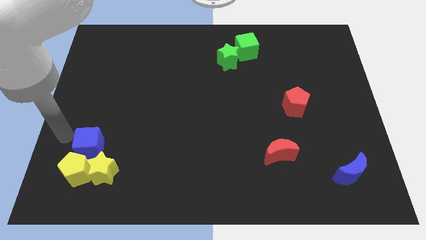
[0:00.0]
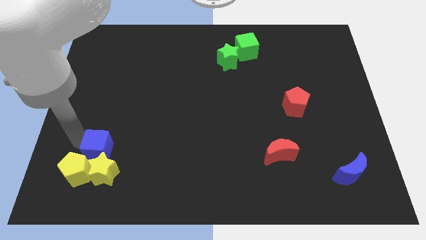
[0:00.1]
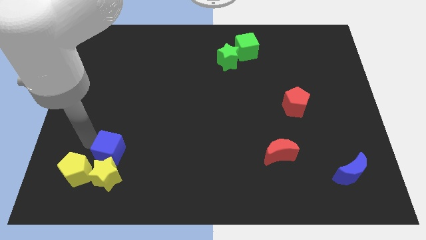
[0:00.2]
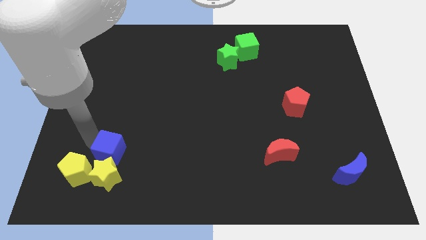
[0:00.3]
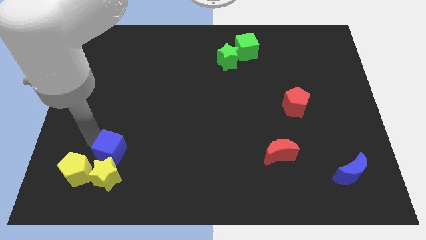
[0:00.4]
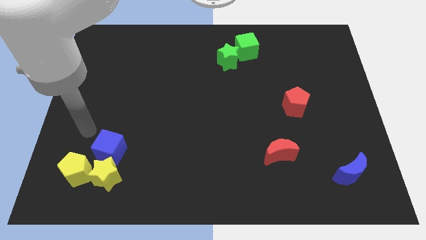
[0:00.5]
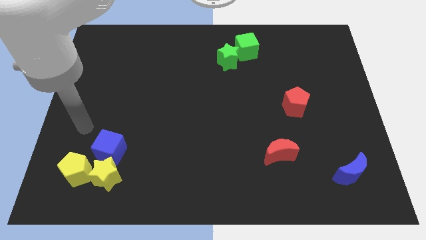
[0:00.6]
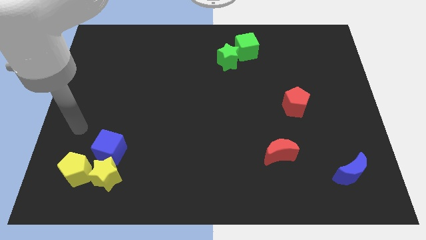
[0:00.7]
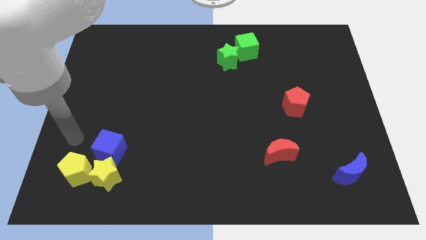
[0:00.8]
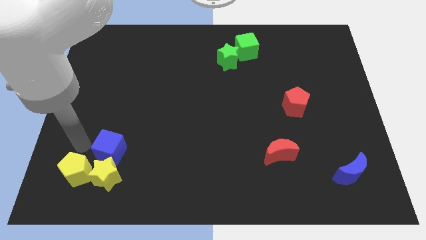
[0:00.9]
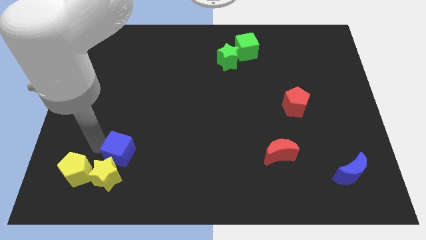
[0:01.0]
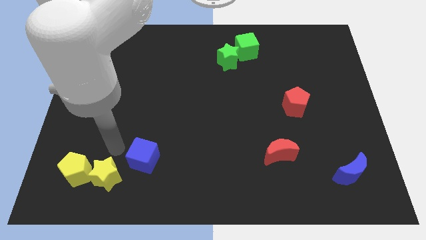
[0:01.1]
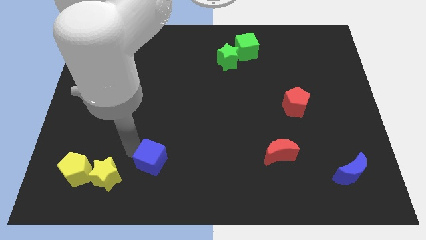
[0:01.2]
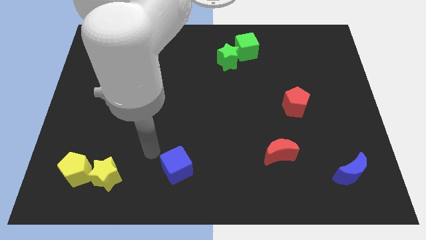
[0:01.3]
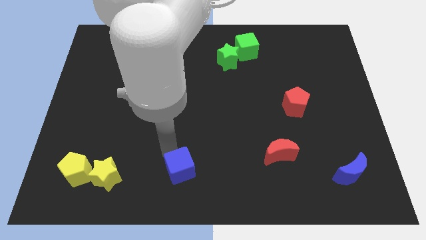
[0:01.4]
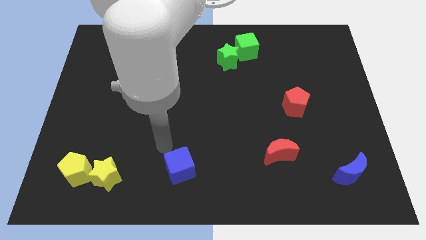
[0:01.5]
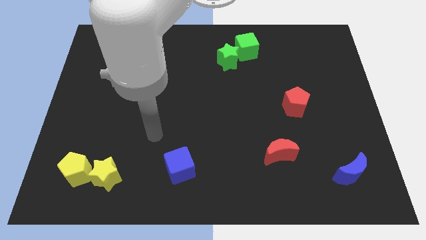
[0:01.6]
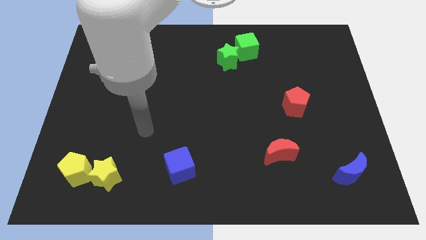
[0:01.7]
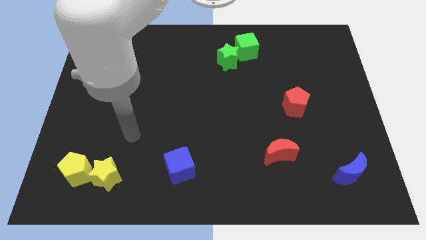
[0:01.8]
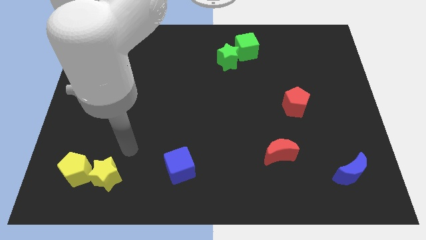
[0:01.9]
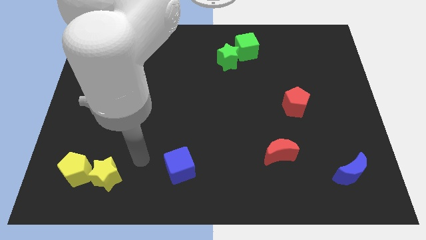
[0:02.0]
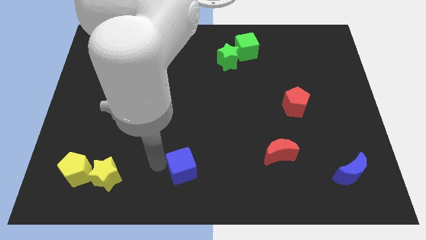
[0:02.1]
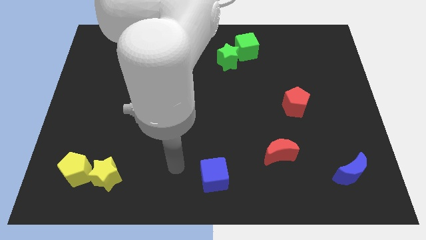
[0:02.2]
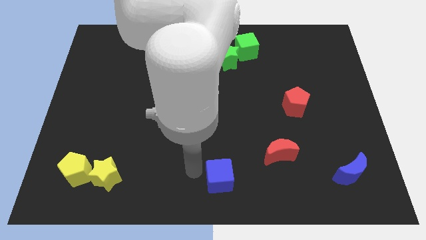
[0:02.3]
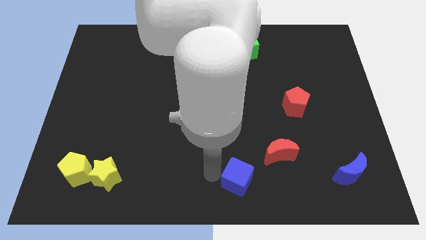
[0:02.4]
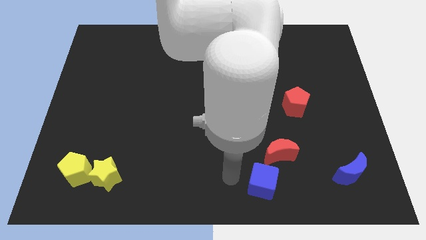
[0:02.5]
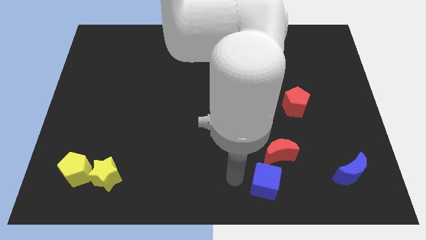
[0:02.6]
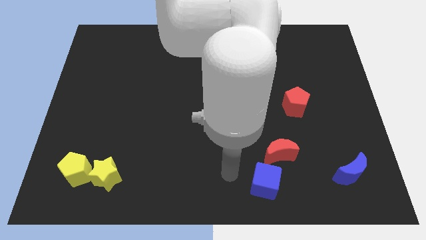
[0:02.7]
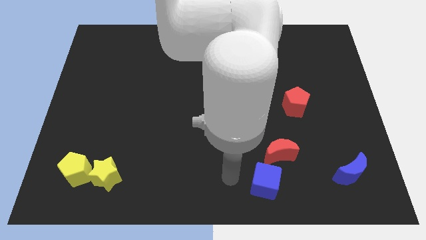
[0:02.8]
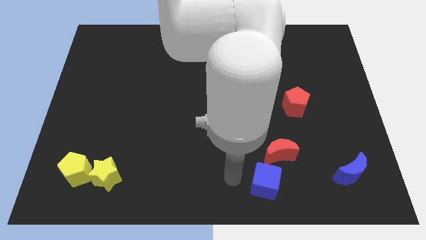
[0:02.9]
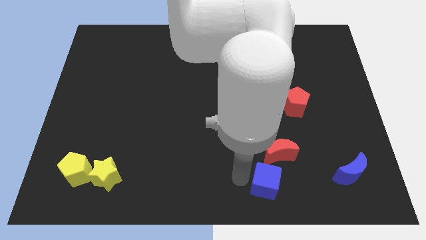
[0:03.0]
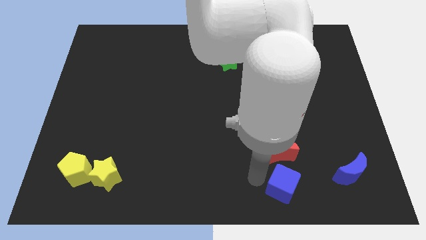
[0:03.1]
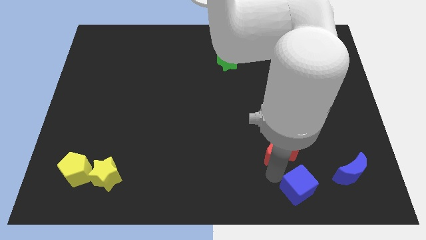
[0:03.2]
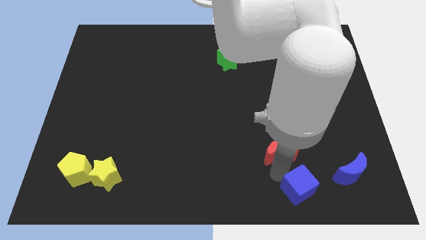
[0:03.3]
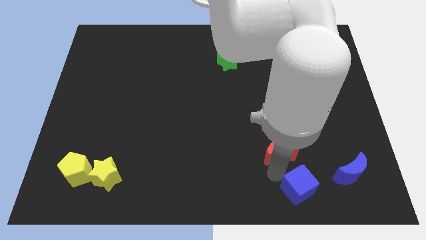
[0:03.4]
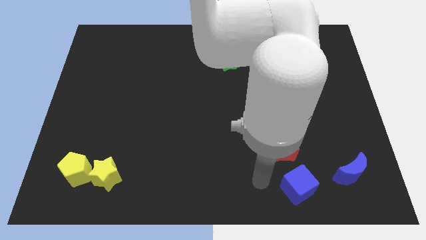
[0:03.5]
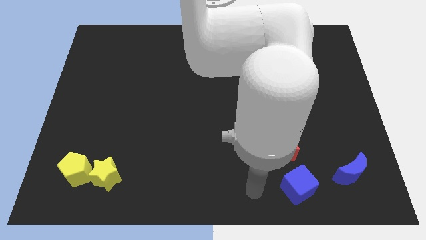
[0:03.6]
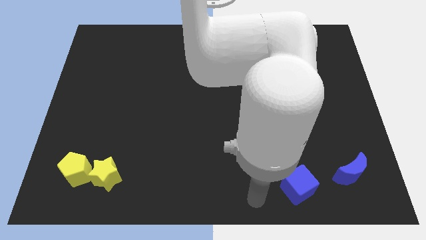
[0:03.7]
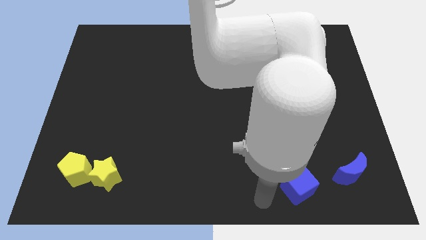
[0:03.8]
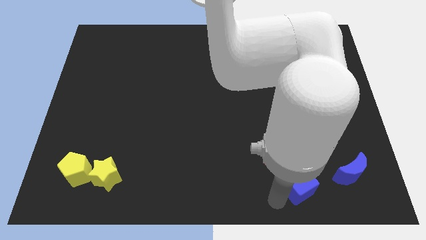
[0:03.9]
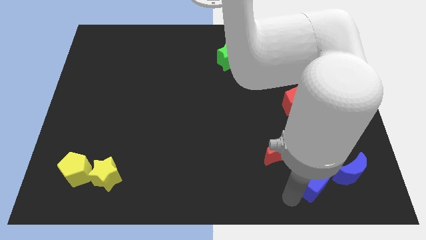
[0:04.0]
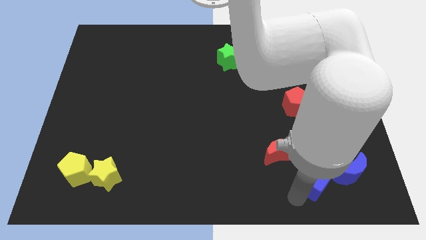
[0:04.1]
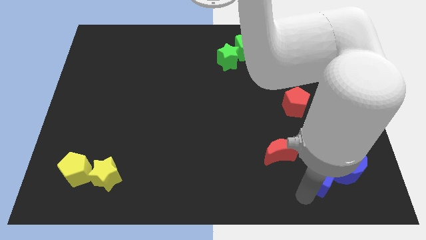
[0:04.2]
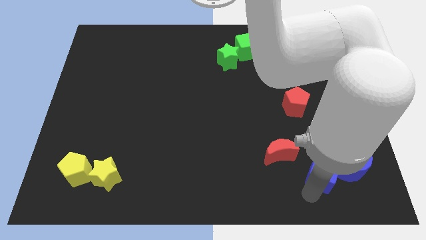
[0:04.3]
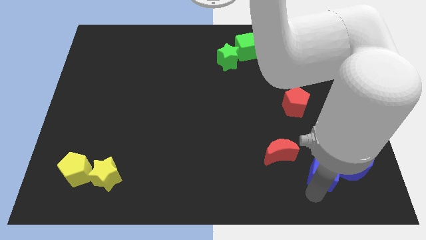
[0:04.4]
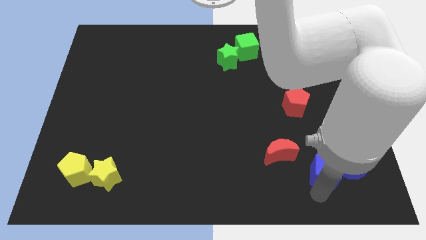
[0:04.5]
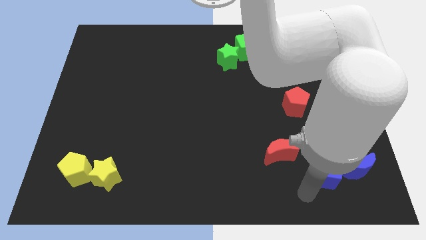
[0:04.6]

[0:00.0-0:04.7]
move blue cube into blue crescent

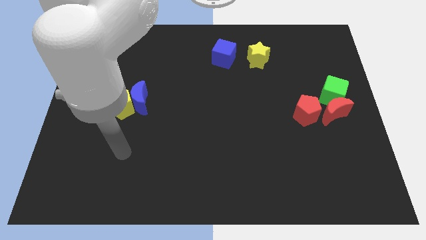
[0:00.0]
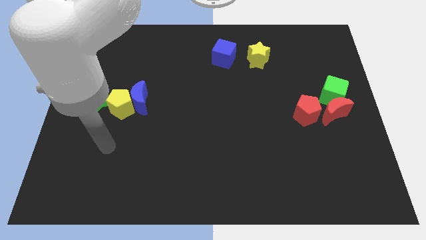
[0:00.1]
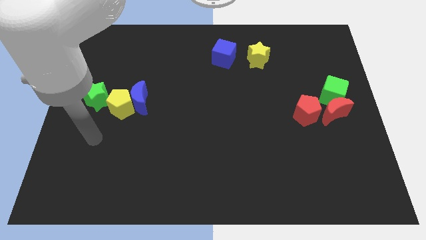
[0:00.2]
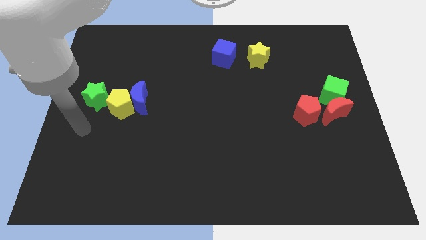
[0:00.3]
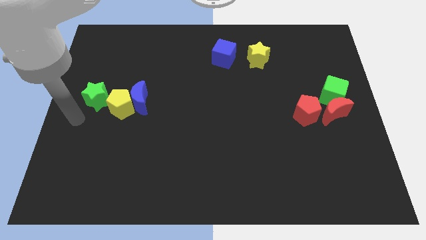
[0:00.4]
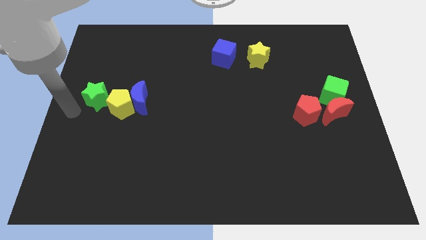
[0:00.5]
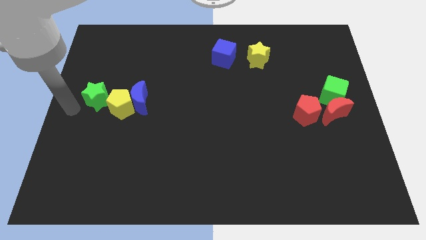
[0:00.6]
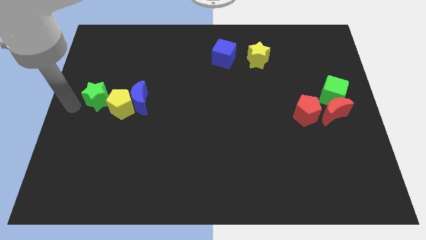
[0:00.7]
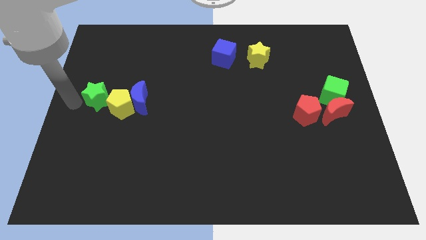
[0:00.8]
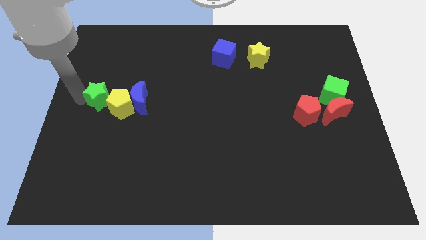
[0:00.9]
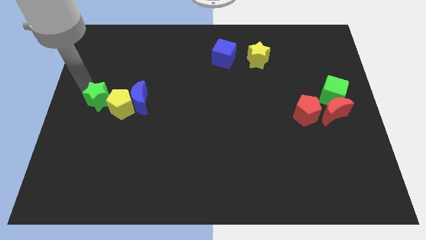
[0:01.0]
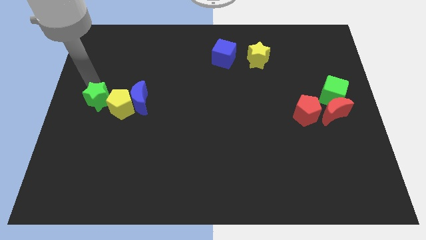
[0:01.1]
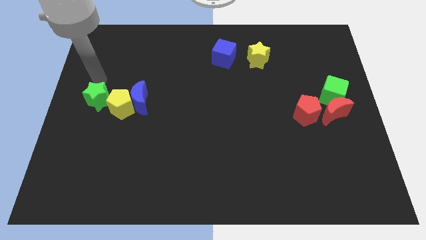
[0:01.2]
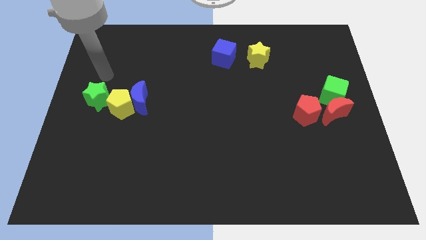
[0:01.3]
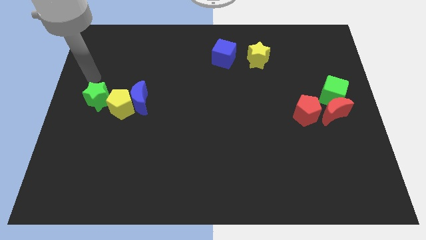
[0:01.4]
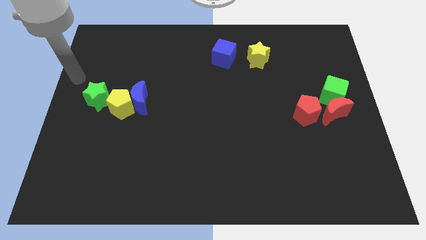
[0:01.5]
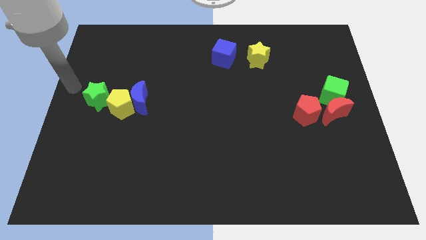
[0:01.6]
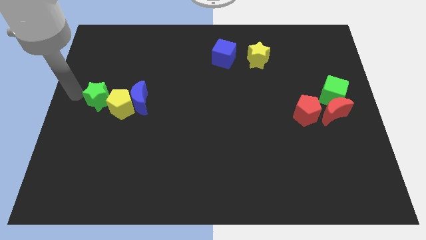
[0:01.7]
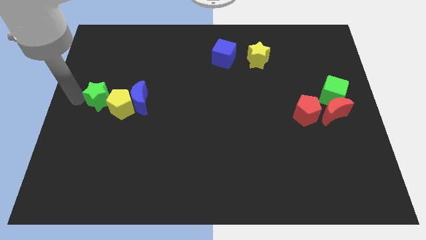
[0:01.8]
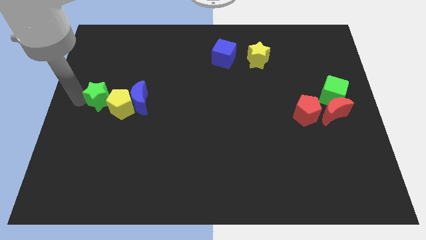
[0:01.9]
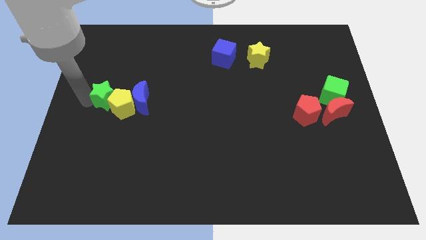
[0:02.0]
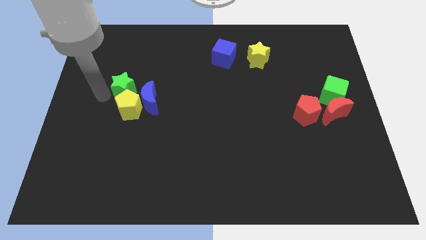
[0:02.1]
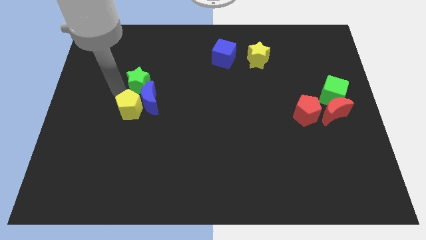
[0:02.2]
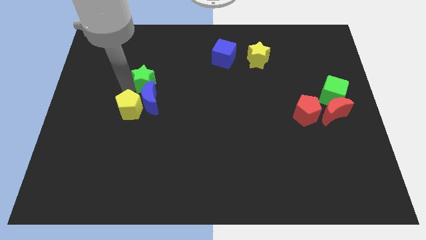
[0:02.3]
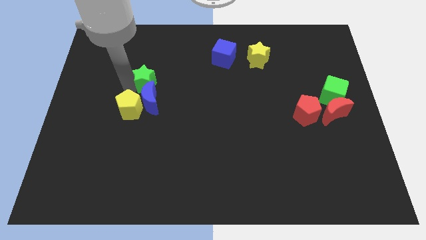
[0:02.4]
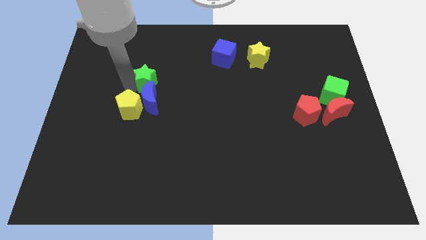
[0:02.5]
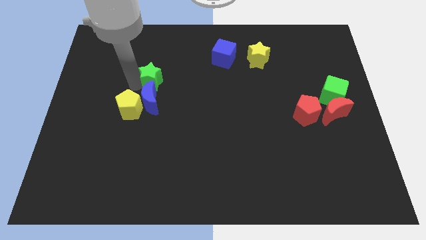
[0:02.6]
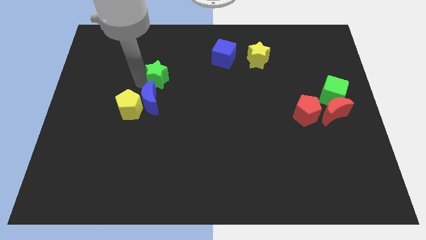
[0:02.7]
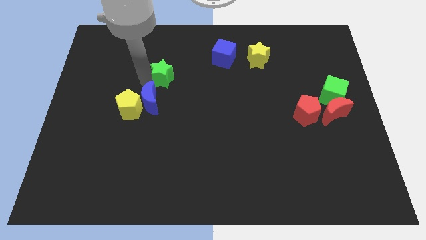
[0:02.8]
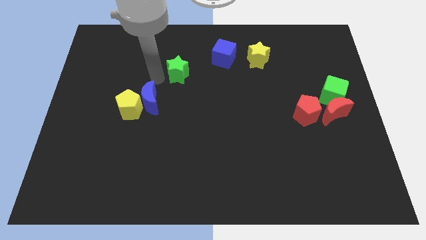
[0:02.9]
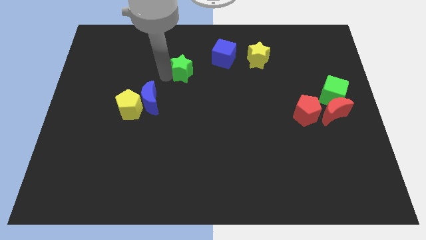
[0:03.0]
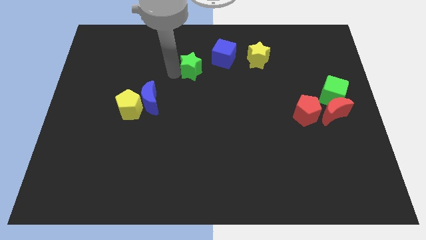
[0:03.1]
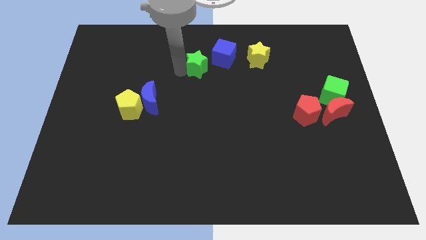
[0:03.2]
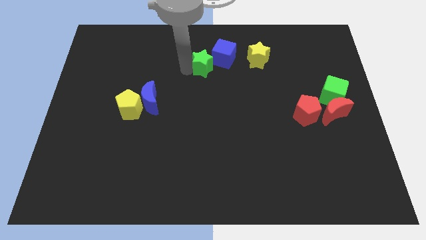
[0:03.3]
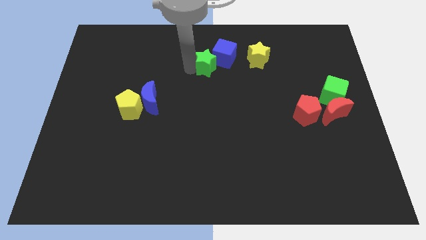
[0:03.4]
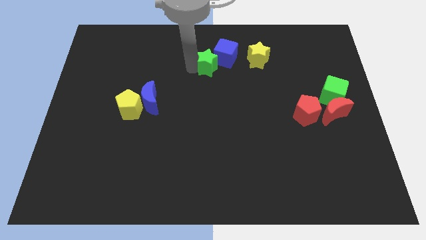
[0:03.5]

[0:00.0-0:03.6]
push the green star towards the center

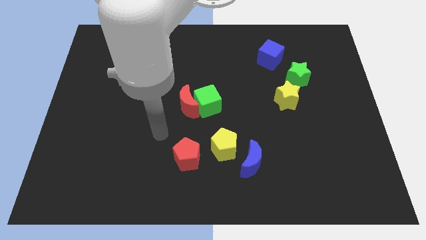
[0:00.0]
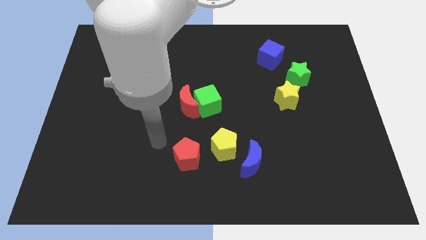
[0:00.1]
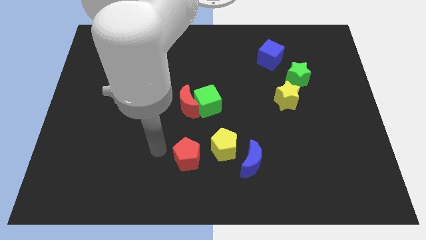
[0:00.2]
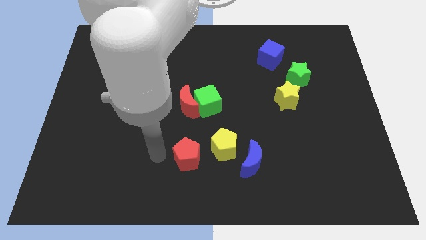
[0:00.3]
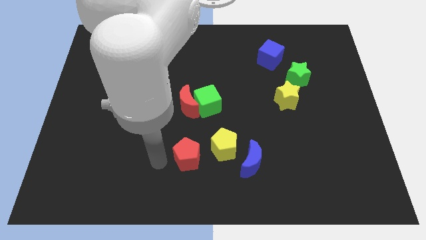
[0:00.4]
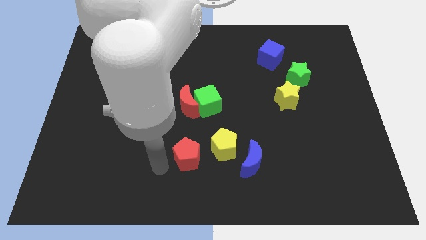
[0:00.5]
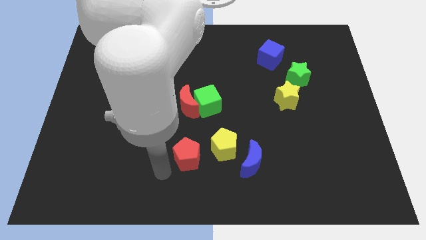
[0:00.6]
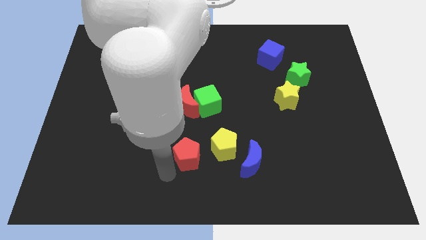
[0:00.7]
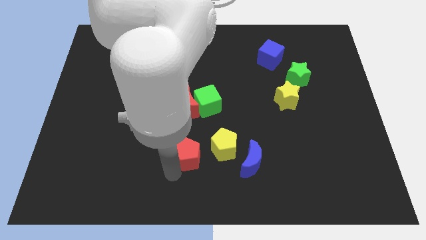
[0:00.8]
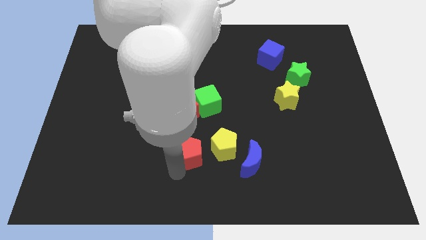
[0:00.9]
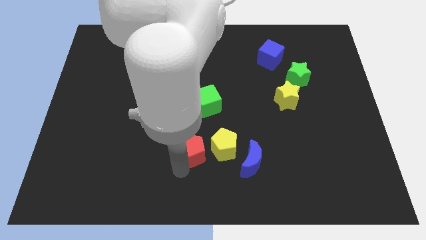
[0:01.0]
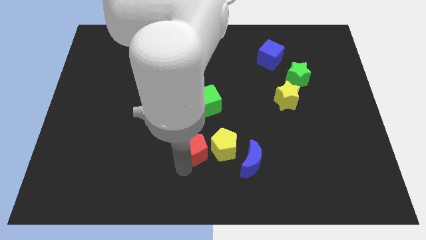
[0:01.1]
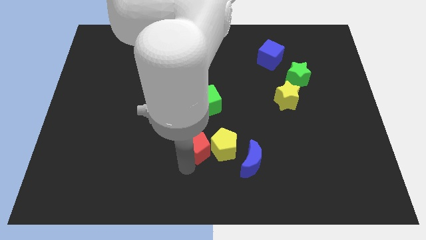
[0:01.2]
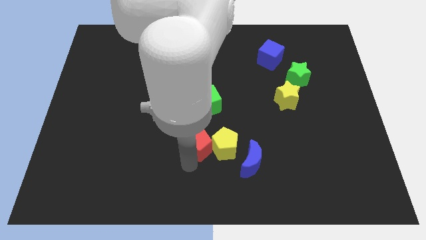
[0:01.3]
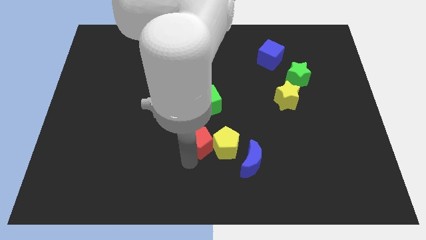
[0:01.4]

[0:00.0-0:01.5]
push the red pentagon right to the yellow pentagon
